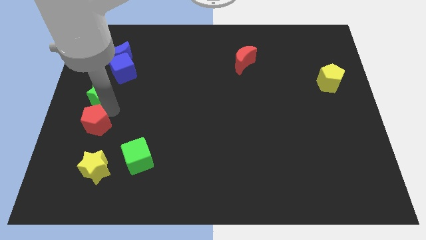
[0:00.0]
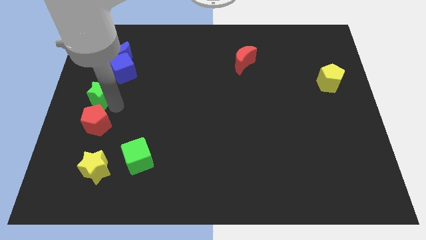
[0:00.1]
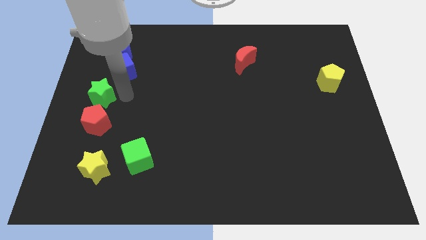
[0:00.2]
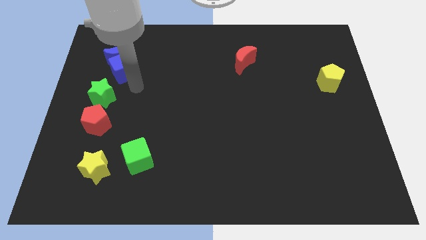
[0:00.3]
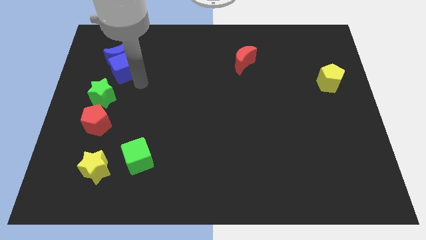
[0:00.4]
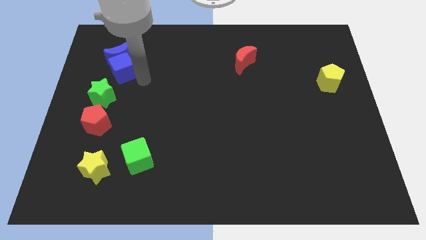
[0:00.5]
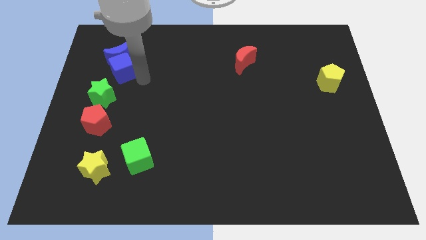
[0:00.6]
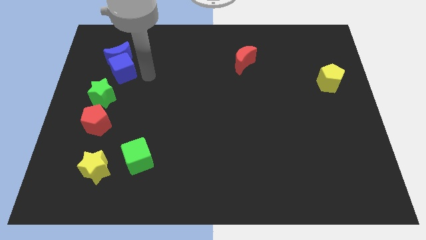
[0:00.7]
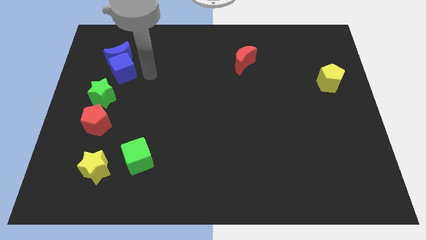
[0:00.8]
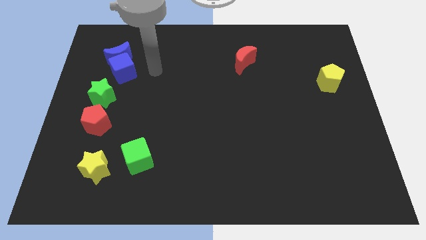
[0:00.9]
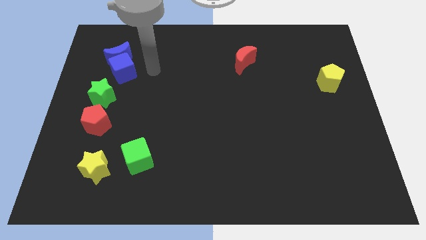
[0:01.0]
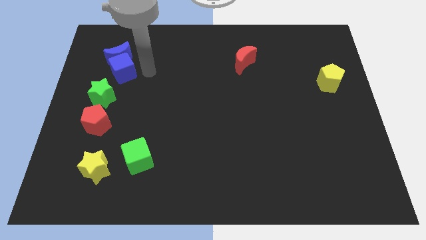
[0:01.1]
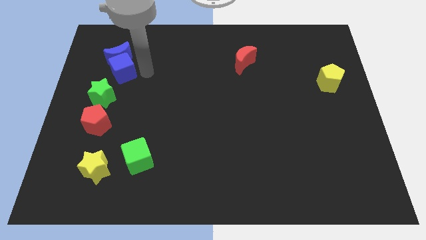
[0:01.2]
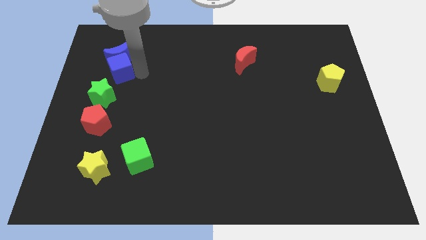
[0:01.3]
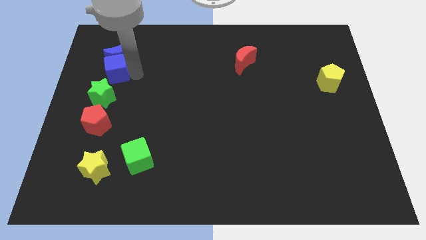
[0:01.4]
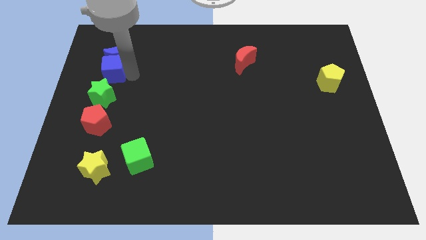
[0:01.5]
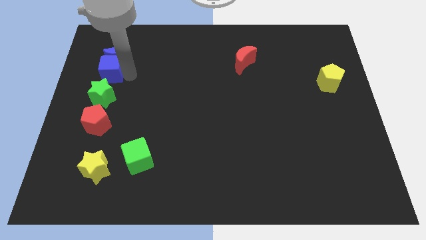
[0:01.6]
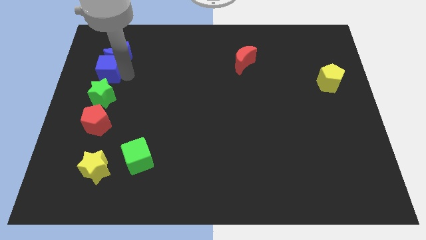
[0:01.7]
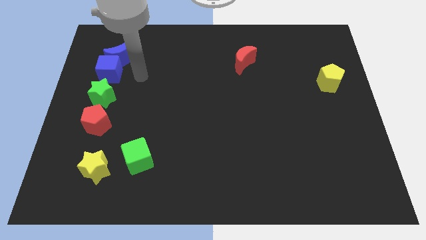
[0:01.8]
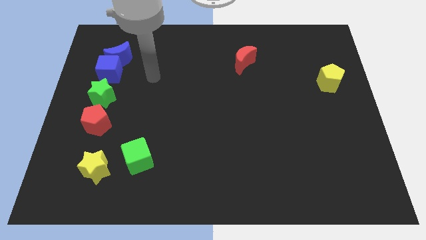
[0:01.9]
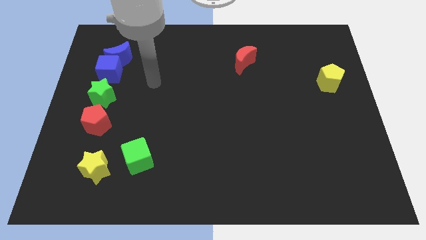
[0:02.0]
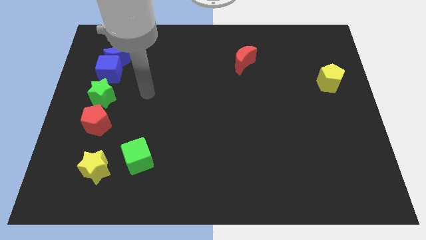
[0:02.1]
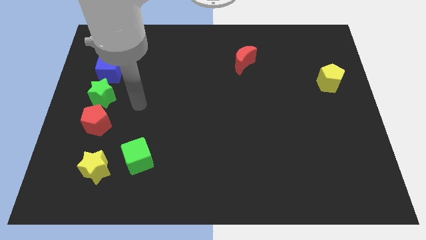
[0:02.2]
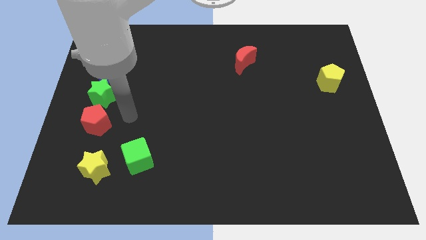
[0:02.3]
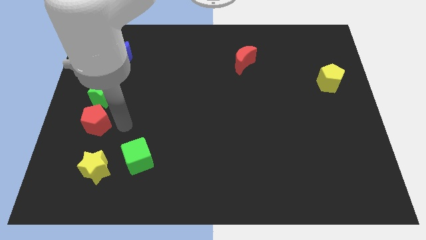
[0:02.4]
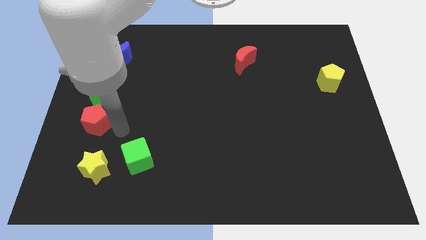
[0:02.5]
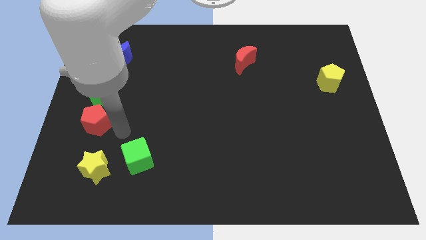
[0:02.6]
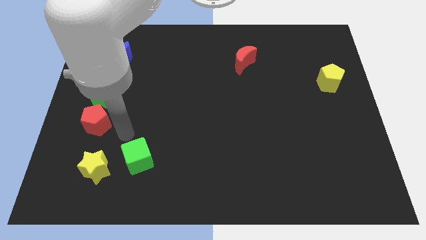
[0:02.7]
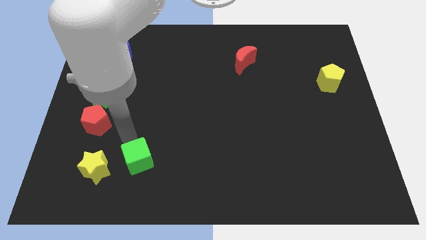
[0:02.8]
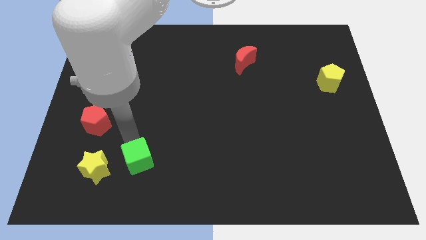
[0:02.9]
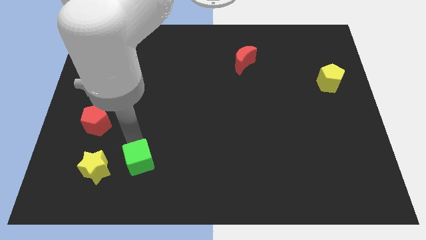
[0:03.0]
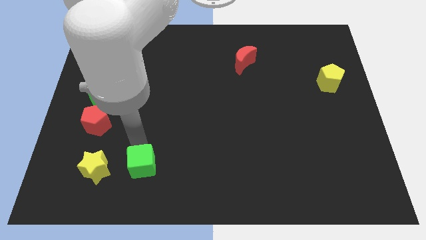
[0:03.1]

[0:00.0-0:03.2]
move the blue cube to the top of the green star

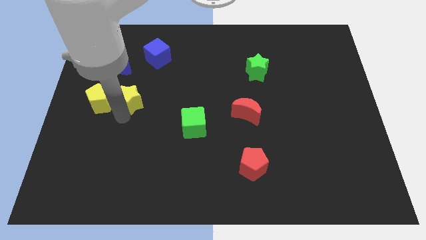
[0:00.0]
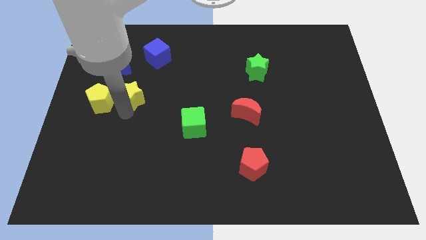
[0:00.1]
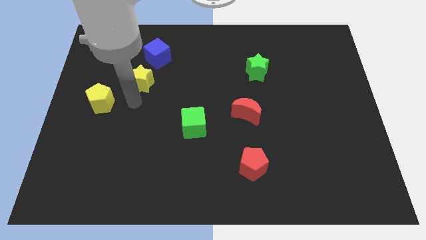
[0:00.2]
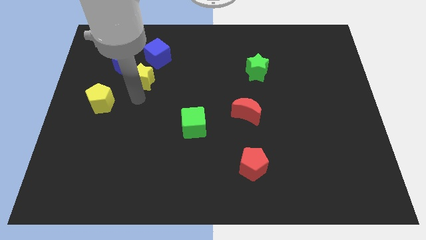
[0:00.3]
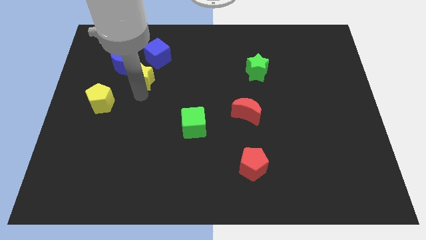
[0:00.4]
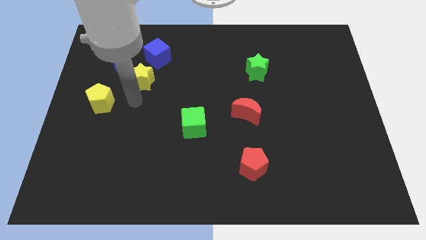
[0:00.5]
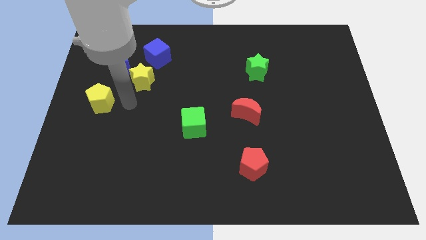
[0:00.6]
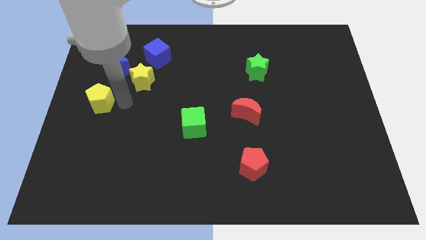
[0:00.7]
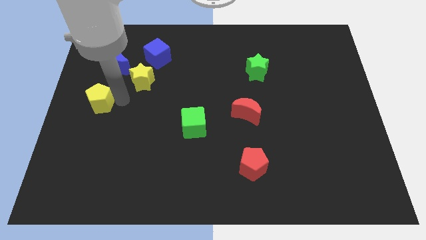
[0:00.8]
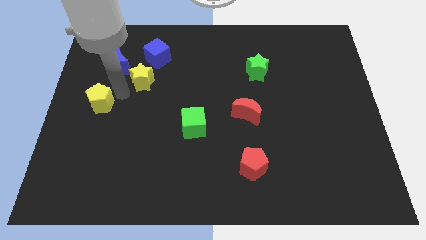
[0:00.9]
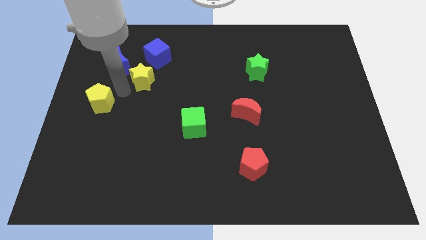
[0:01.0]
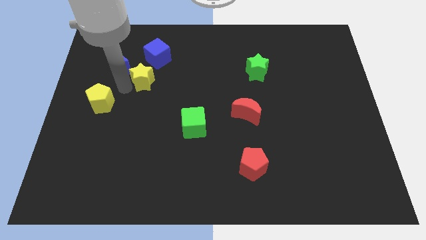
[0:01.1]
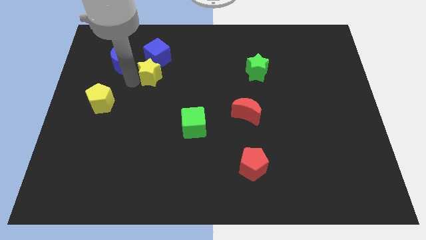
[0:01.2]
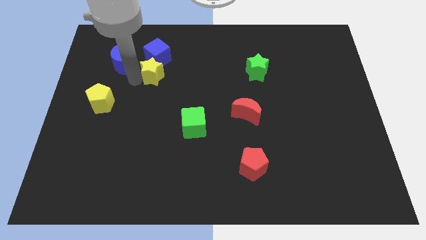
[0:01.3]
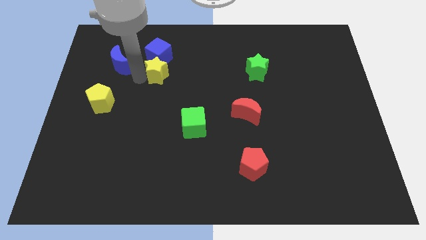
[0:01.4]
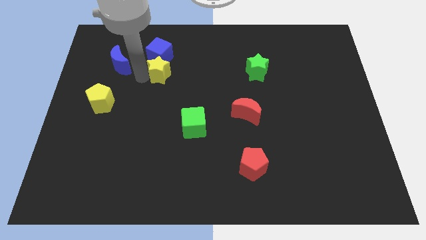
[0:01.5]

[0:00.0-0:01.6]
push the yellow pentagon into blue cube

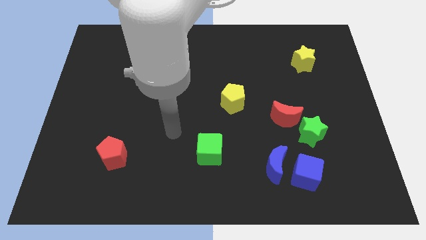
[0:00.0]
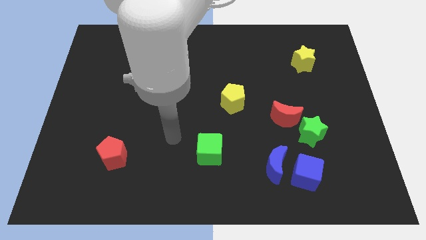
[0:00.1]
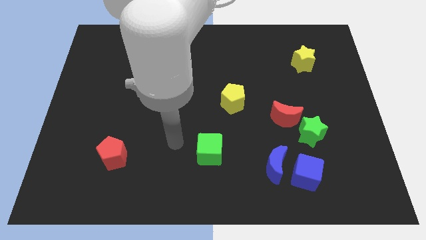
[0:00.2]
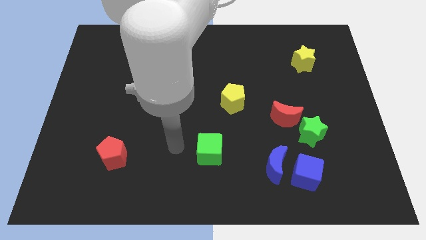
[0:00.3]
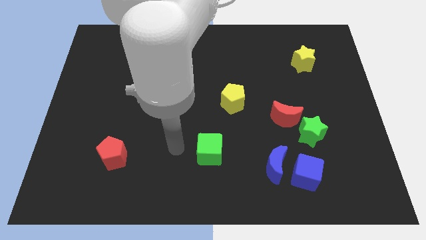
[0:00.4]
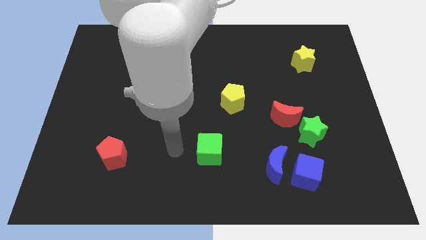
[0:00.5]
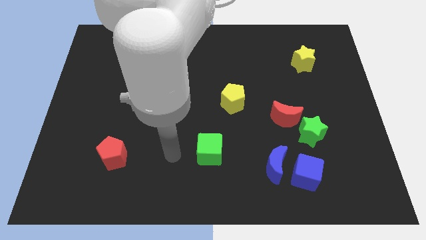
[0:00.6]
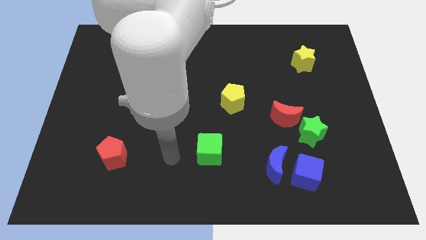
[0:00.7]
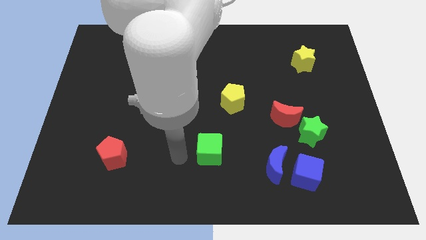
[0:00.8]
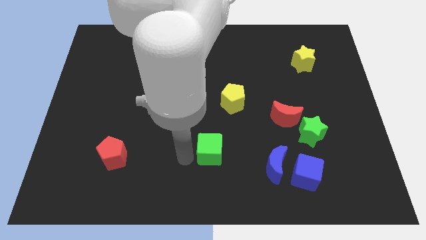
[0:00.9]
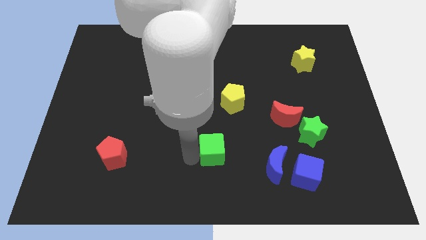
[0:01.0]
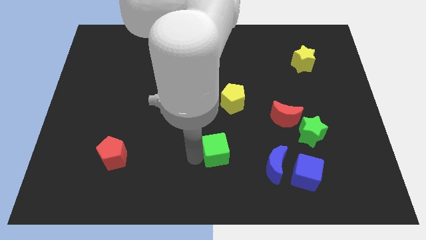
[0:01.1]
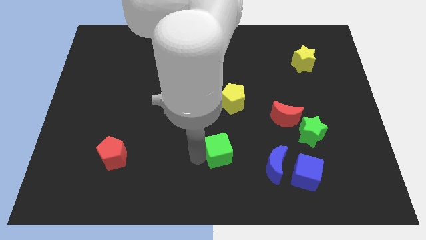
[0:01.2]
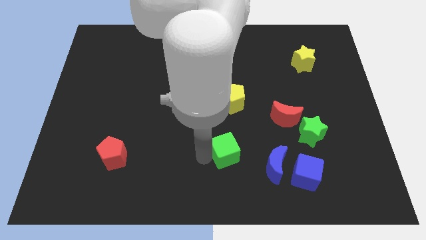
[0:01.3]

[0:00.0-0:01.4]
slide the green cube vertically below the yellow pentagon

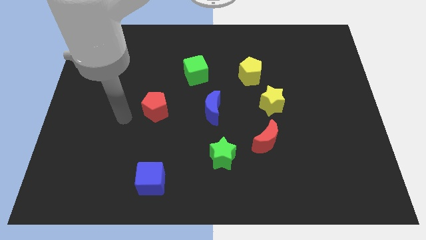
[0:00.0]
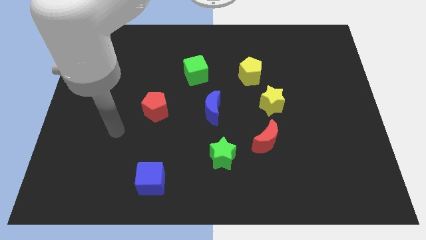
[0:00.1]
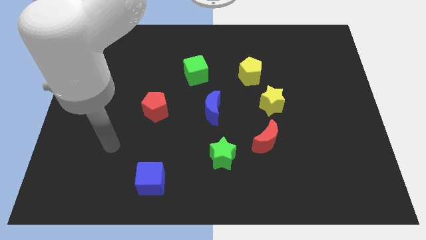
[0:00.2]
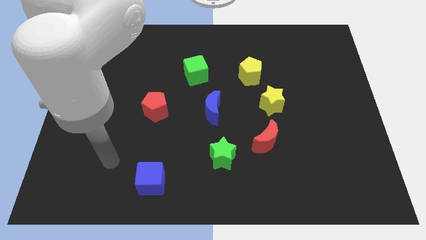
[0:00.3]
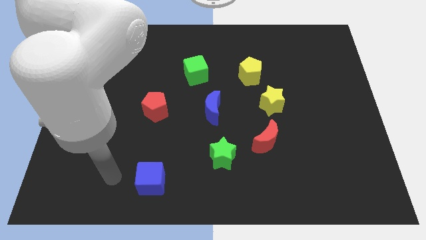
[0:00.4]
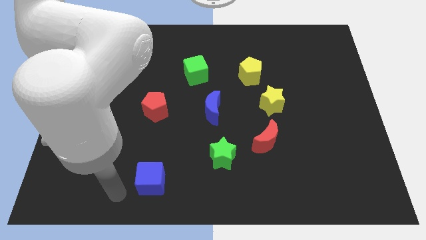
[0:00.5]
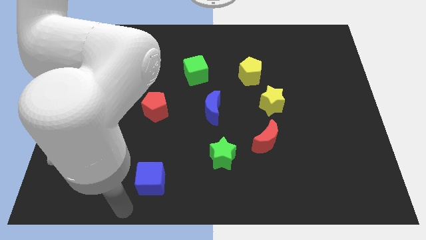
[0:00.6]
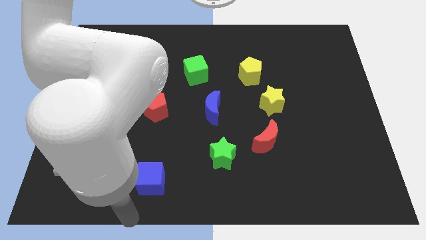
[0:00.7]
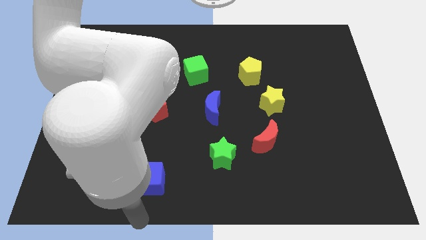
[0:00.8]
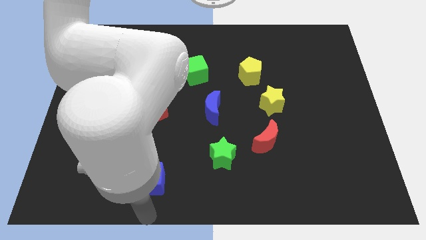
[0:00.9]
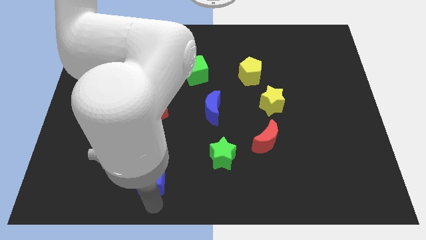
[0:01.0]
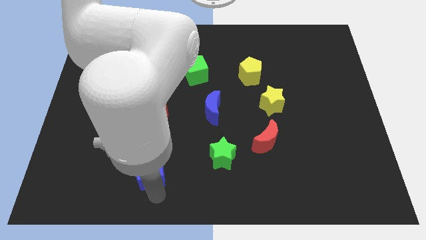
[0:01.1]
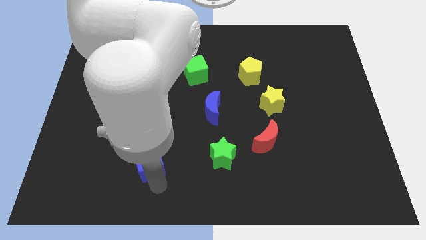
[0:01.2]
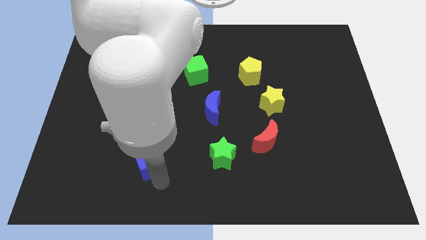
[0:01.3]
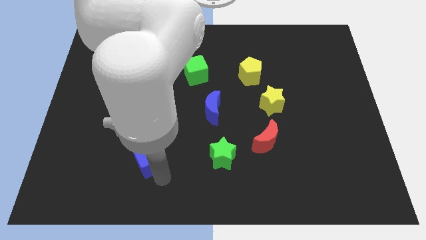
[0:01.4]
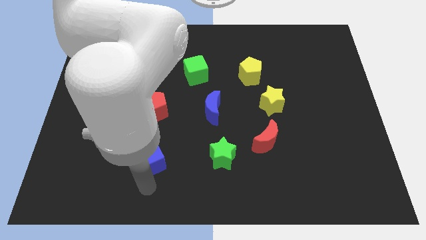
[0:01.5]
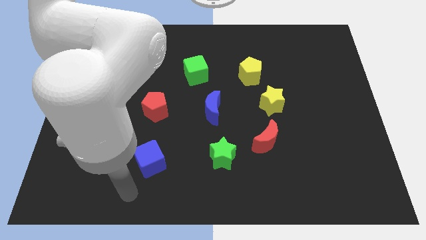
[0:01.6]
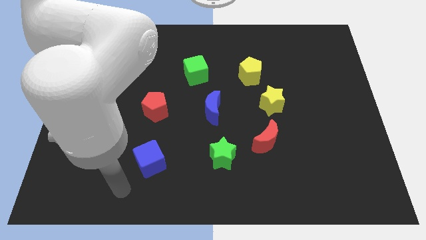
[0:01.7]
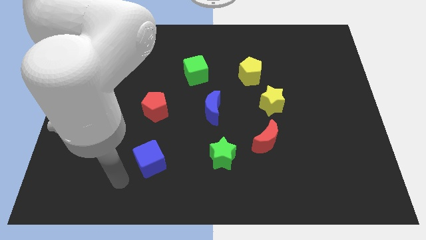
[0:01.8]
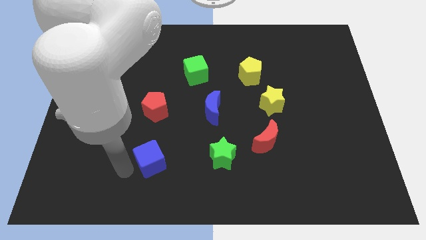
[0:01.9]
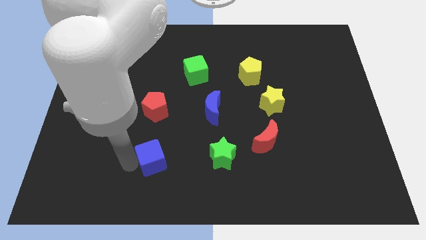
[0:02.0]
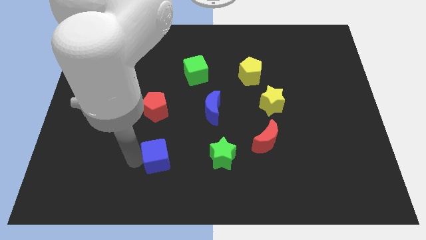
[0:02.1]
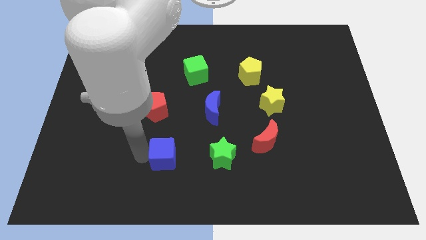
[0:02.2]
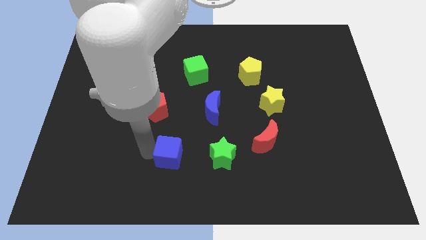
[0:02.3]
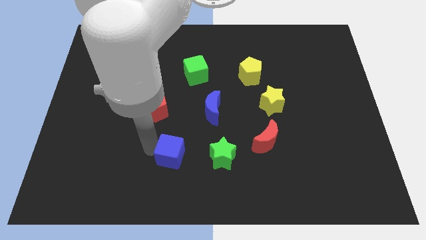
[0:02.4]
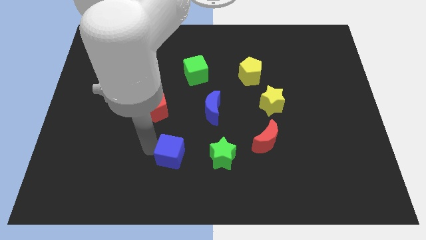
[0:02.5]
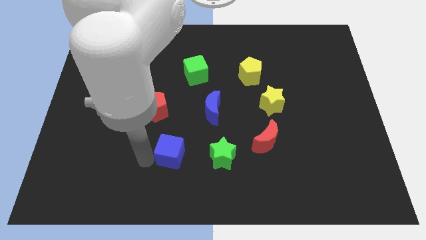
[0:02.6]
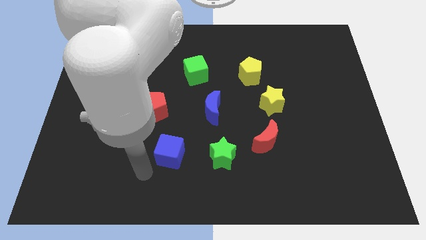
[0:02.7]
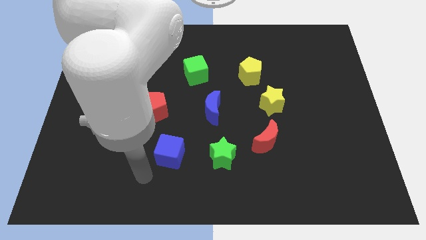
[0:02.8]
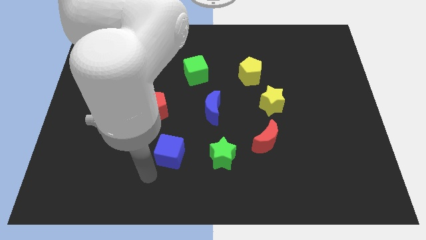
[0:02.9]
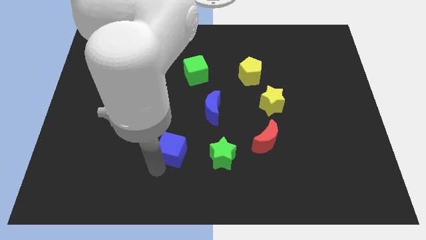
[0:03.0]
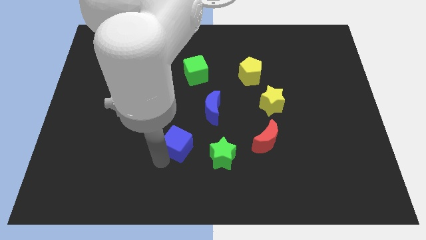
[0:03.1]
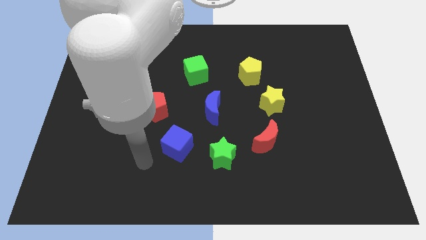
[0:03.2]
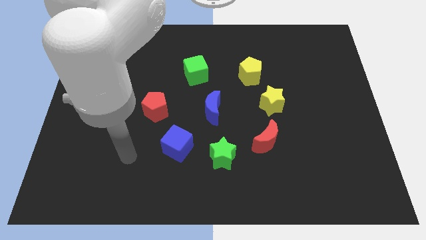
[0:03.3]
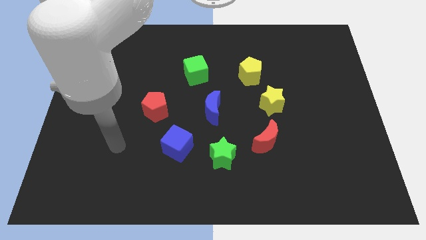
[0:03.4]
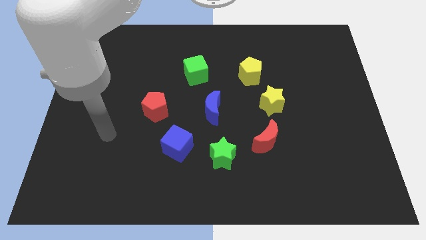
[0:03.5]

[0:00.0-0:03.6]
push the blue cube towards center to form a triangle with blue moon and green star
